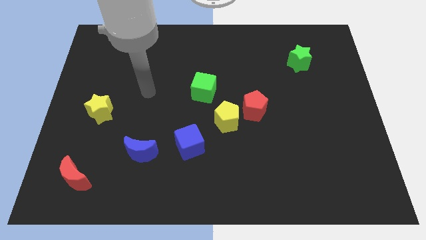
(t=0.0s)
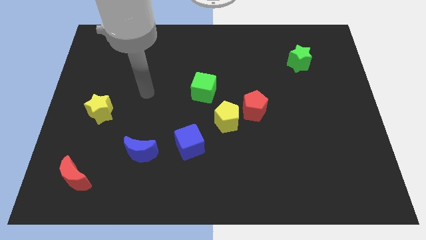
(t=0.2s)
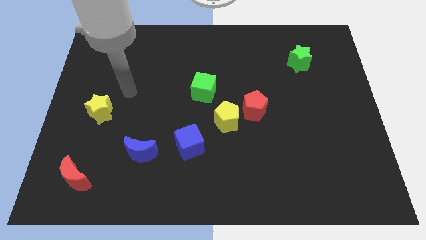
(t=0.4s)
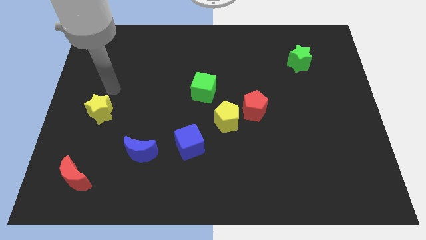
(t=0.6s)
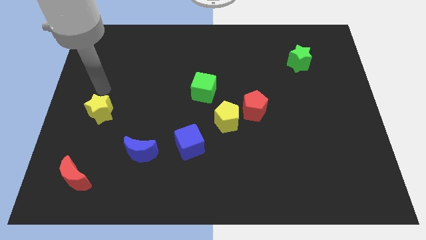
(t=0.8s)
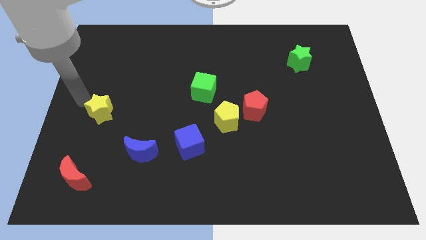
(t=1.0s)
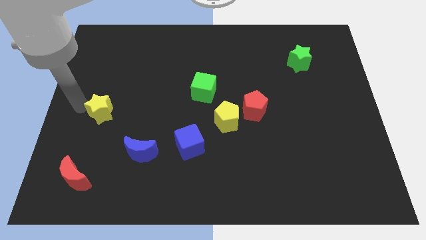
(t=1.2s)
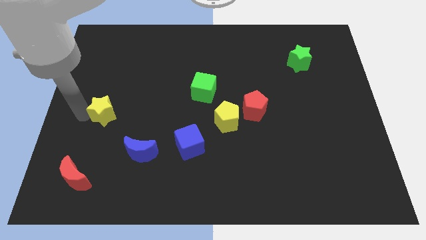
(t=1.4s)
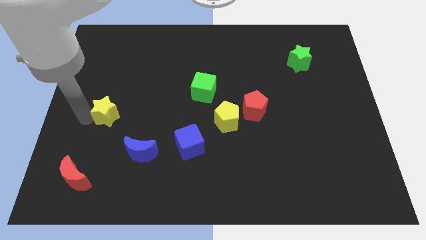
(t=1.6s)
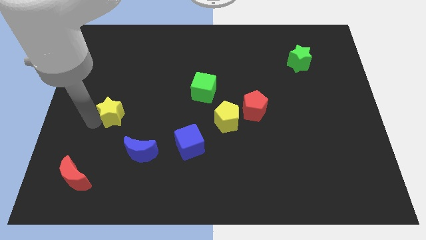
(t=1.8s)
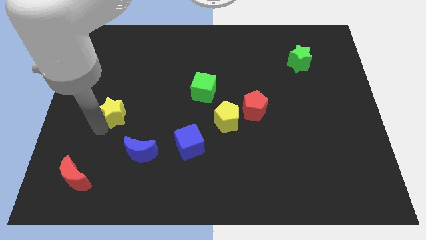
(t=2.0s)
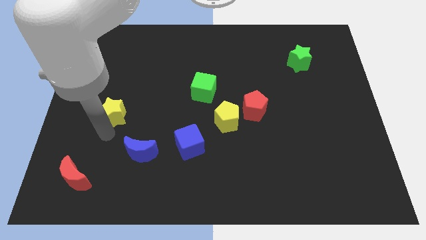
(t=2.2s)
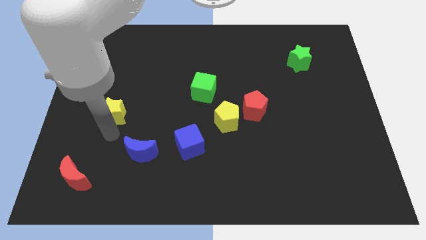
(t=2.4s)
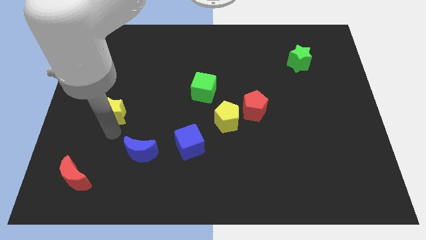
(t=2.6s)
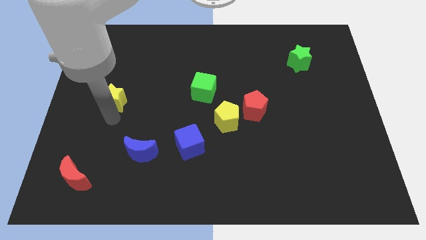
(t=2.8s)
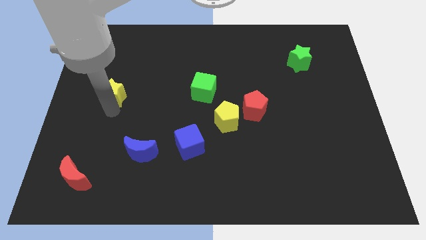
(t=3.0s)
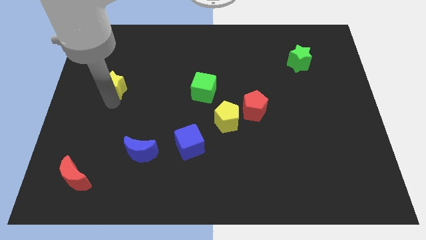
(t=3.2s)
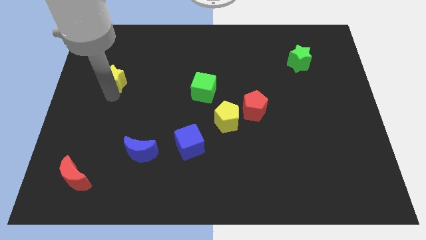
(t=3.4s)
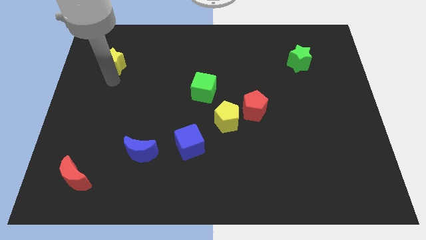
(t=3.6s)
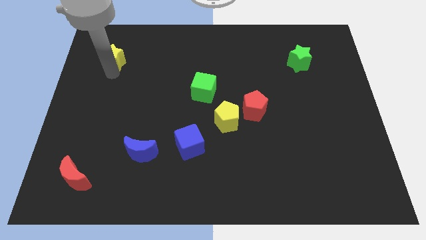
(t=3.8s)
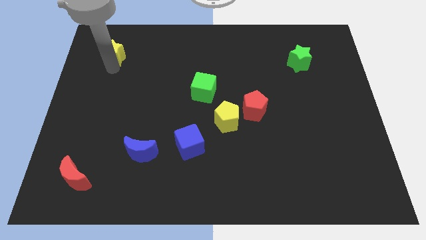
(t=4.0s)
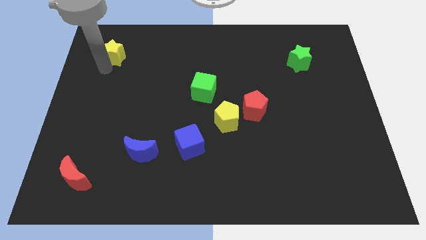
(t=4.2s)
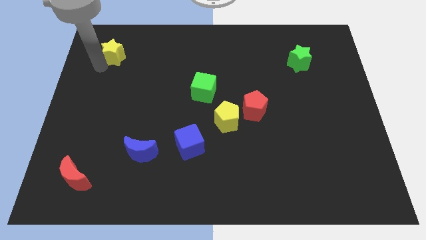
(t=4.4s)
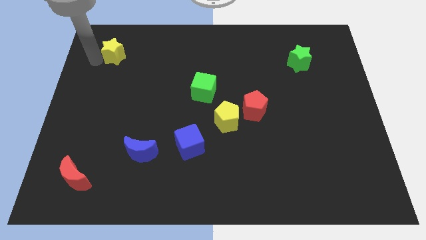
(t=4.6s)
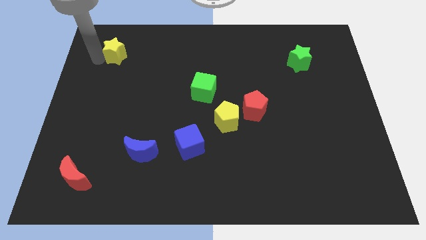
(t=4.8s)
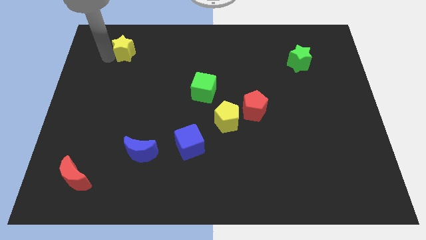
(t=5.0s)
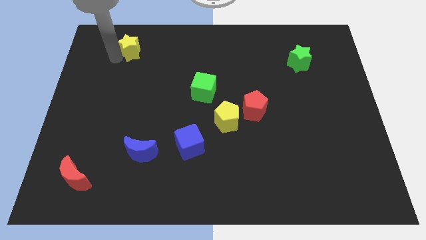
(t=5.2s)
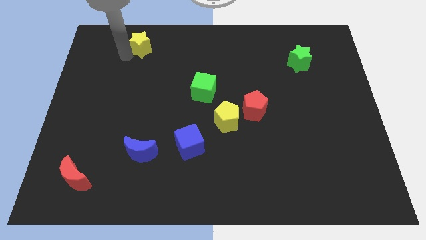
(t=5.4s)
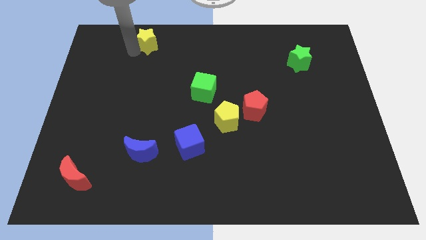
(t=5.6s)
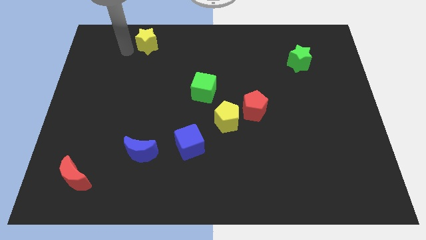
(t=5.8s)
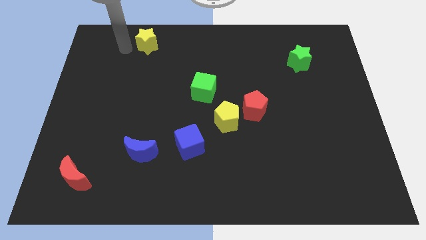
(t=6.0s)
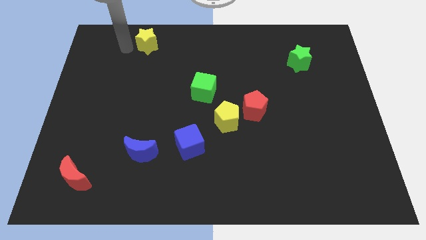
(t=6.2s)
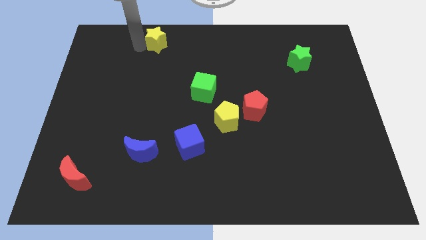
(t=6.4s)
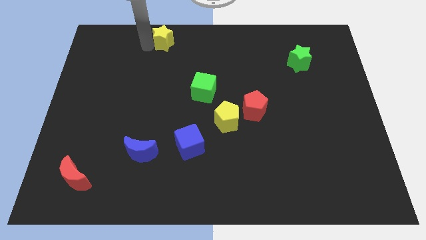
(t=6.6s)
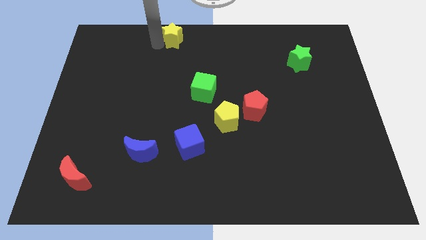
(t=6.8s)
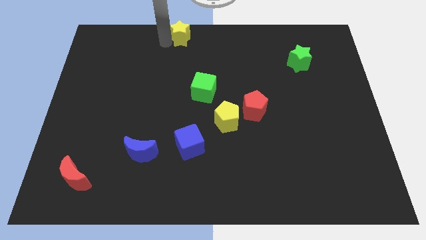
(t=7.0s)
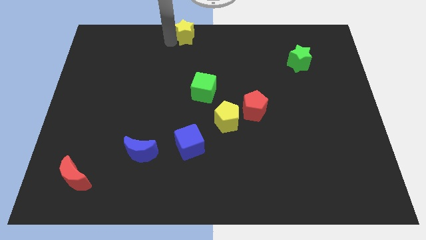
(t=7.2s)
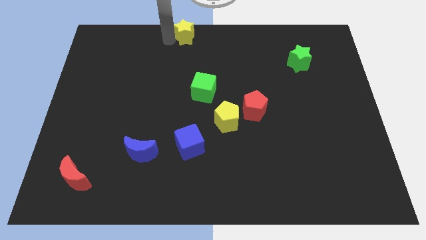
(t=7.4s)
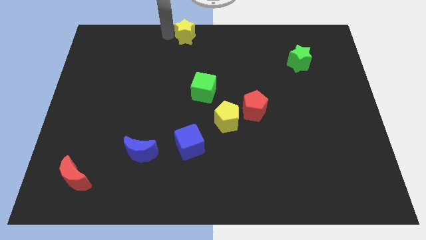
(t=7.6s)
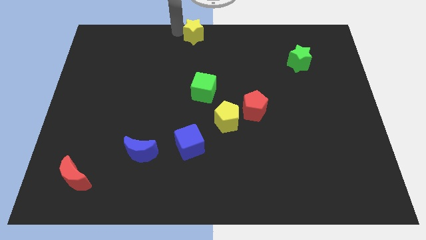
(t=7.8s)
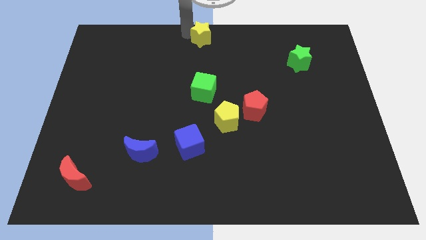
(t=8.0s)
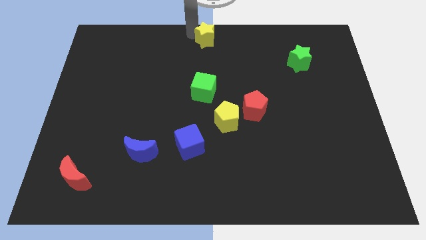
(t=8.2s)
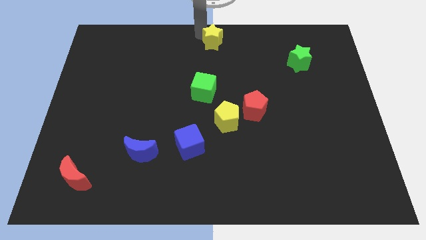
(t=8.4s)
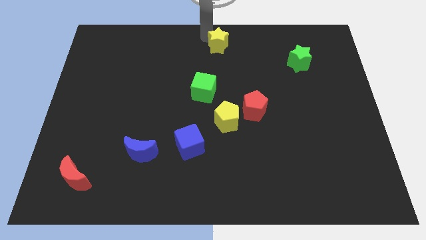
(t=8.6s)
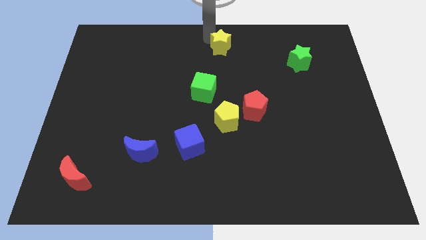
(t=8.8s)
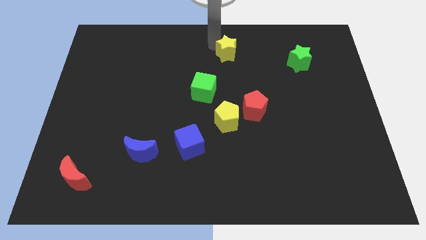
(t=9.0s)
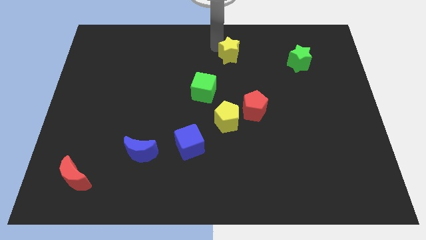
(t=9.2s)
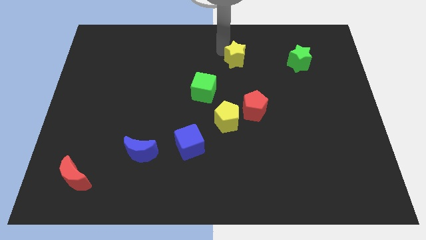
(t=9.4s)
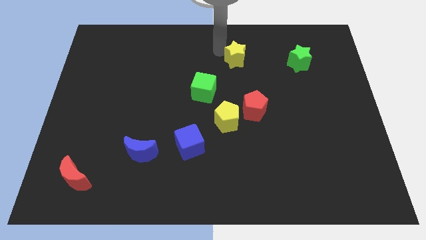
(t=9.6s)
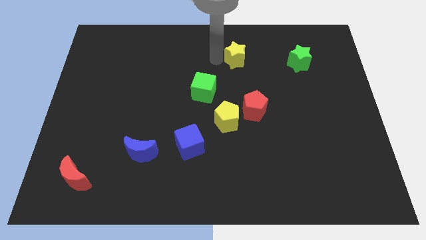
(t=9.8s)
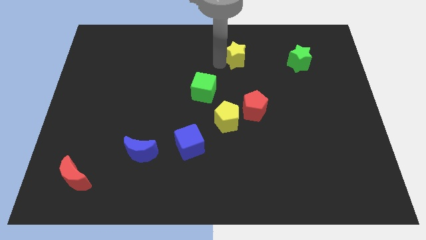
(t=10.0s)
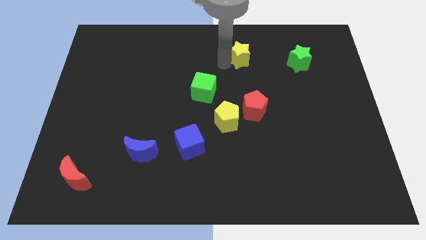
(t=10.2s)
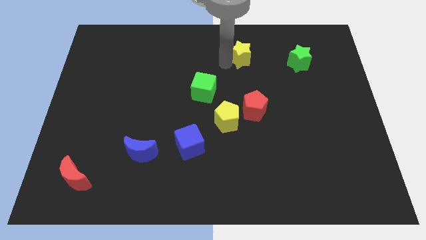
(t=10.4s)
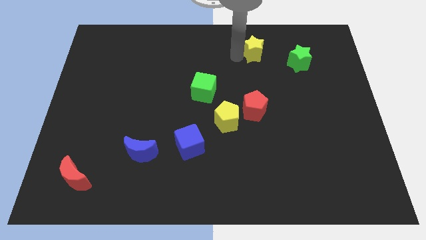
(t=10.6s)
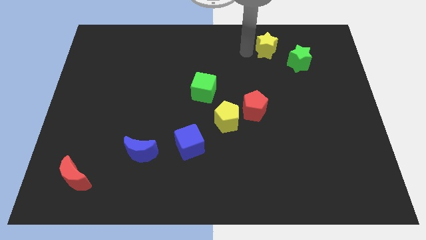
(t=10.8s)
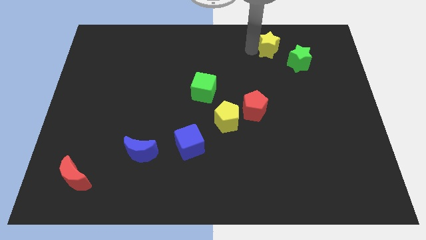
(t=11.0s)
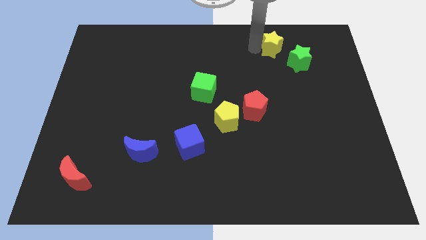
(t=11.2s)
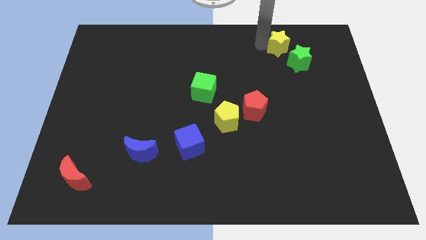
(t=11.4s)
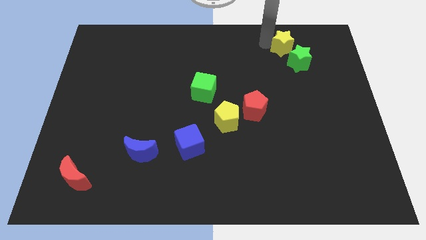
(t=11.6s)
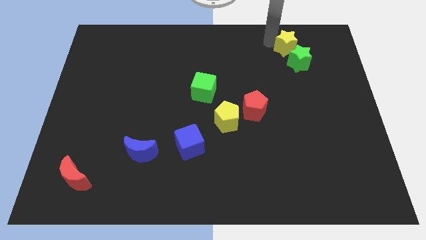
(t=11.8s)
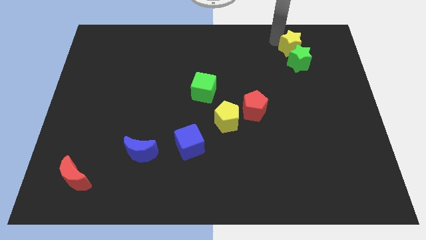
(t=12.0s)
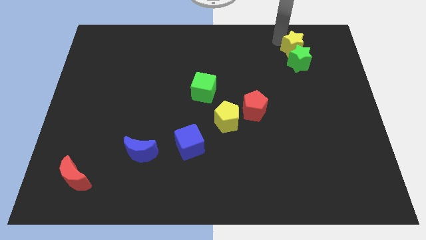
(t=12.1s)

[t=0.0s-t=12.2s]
put the yellow star close to the green star

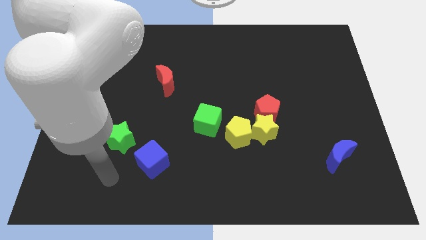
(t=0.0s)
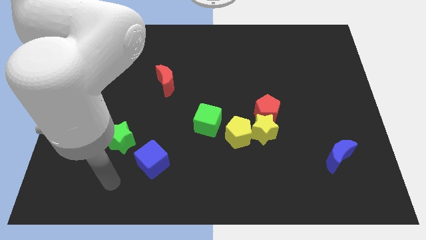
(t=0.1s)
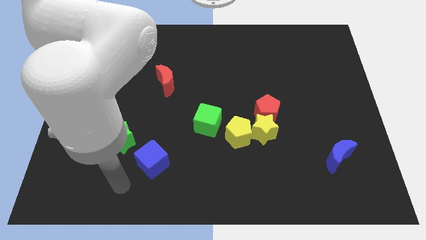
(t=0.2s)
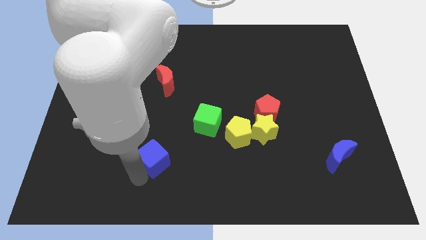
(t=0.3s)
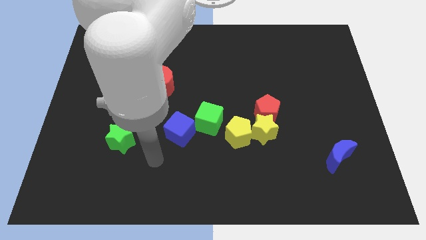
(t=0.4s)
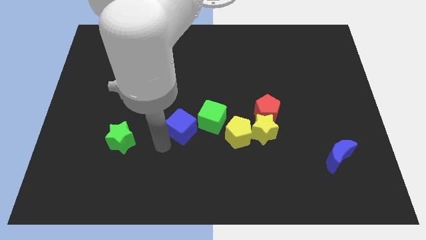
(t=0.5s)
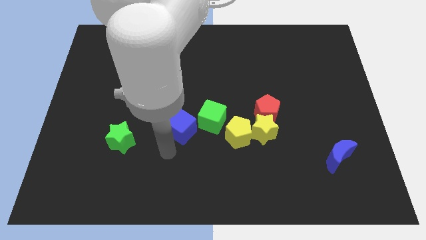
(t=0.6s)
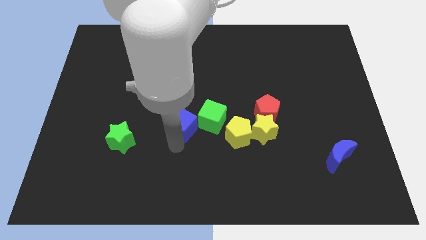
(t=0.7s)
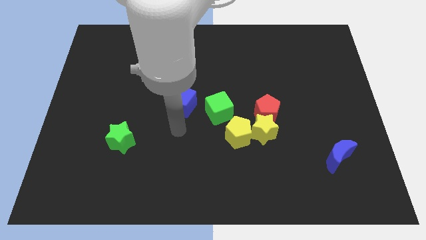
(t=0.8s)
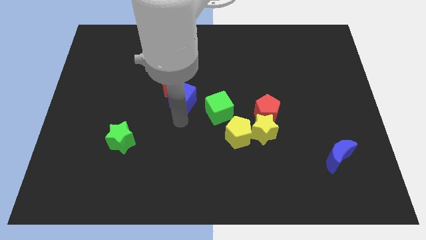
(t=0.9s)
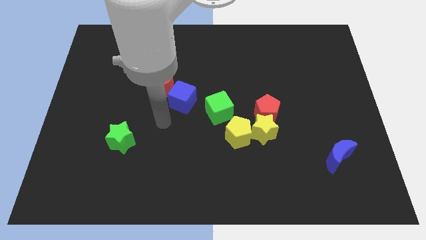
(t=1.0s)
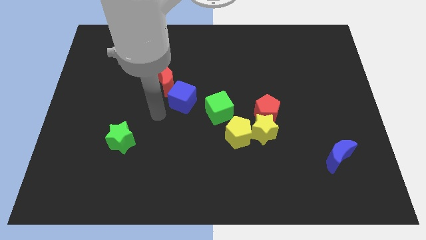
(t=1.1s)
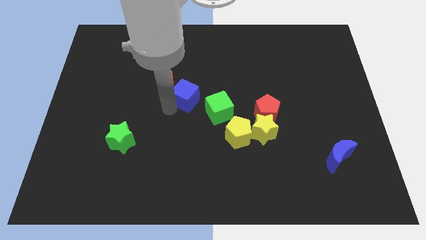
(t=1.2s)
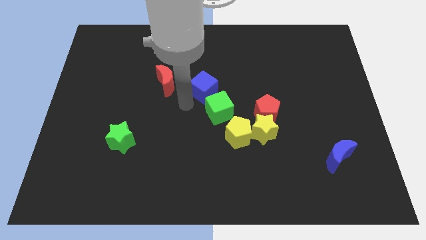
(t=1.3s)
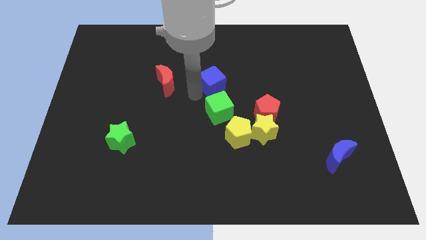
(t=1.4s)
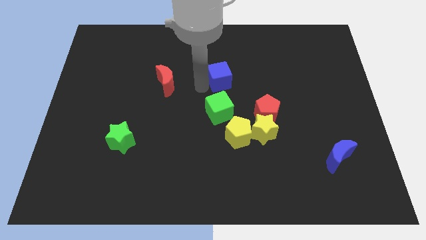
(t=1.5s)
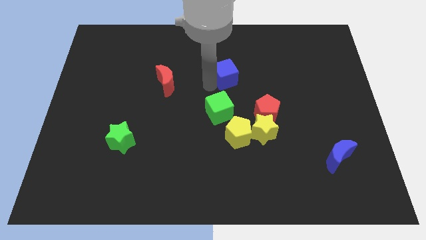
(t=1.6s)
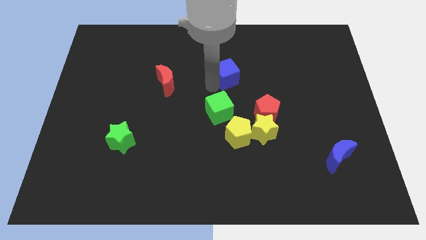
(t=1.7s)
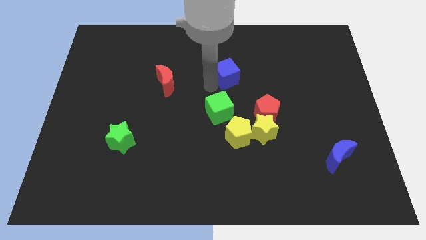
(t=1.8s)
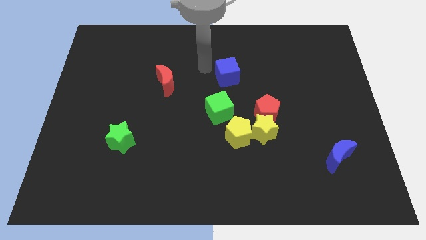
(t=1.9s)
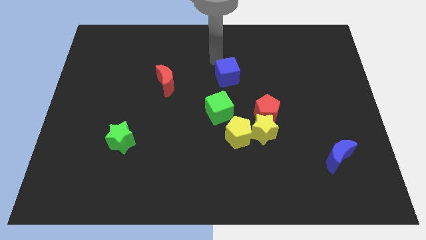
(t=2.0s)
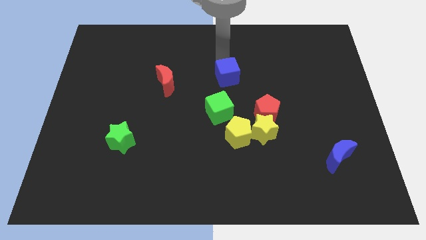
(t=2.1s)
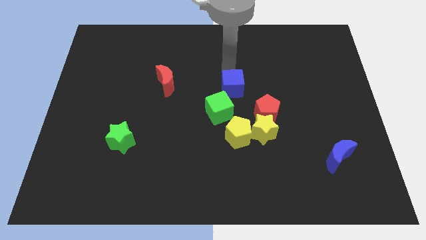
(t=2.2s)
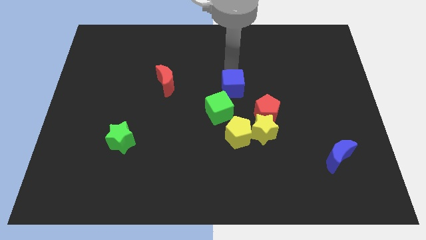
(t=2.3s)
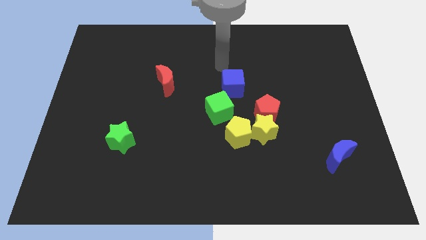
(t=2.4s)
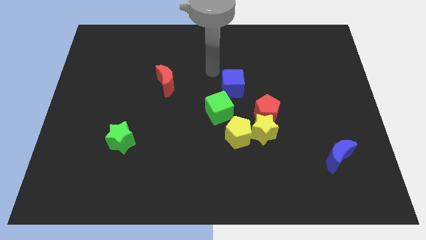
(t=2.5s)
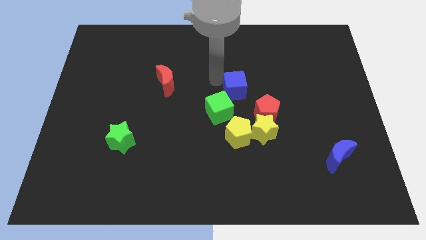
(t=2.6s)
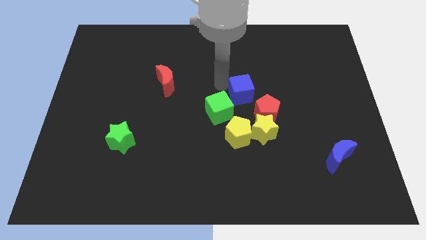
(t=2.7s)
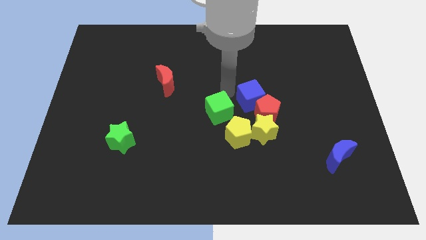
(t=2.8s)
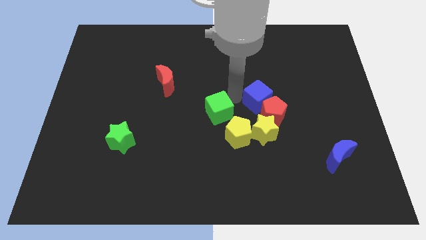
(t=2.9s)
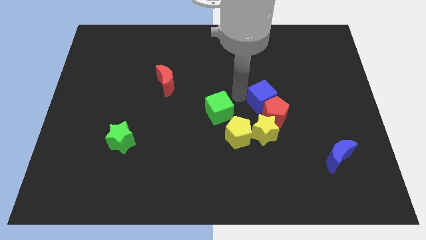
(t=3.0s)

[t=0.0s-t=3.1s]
push the blue cube towards the red pentagon
